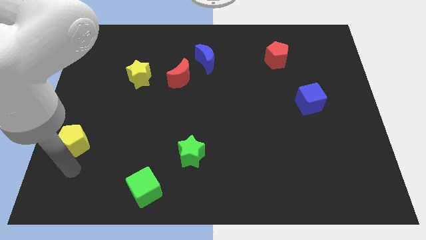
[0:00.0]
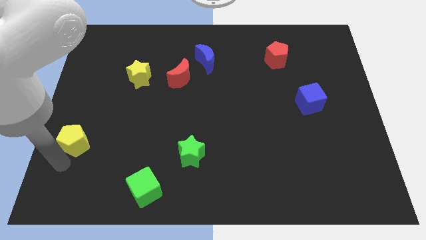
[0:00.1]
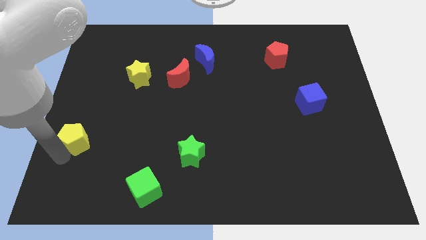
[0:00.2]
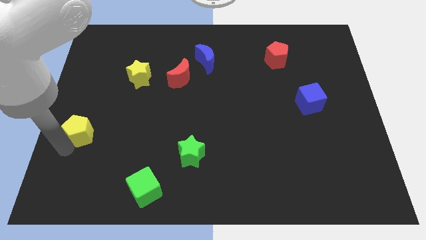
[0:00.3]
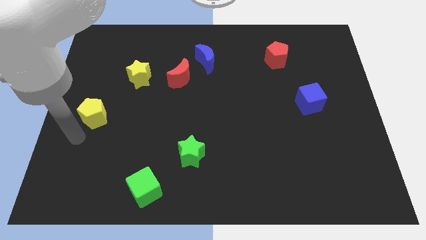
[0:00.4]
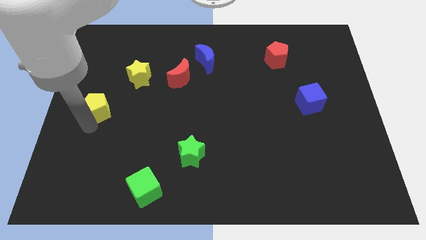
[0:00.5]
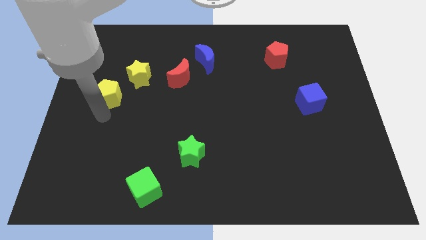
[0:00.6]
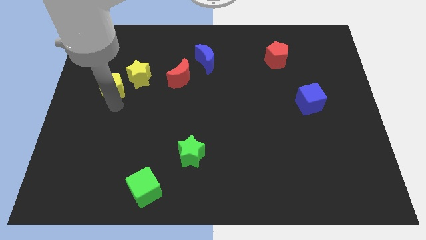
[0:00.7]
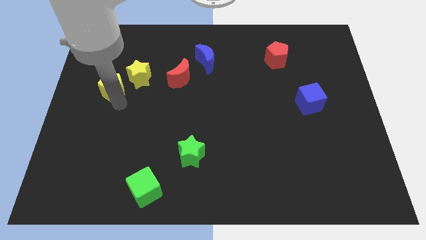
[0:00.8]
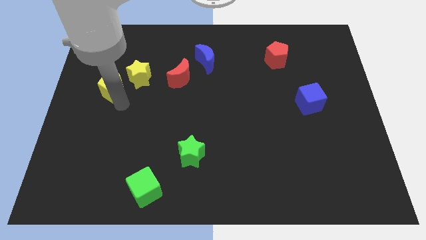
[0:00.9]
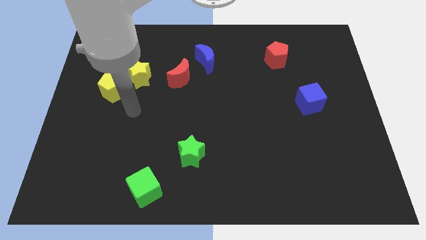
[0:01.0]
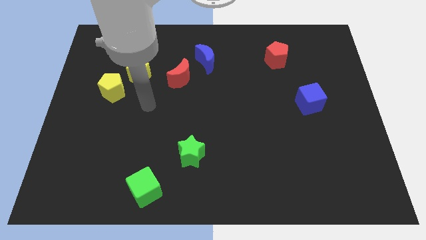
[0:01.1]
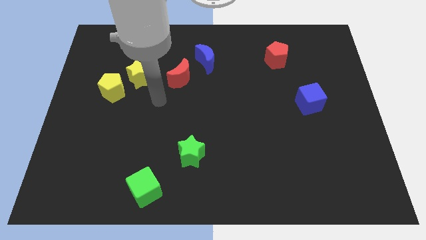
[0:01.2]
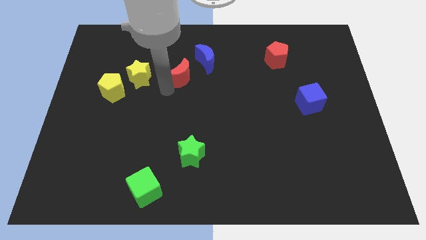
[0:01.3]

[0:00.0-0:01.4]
slide the yellow pentagon close to the yellow star

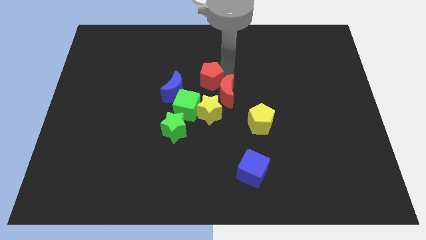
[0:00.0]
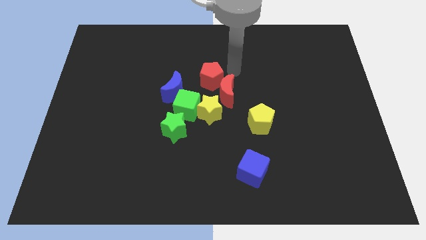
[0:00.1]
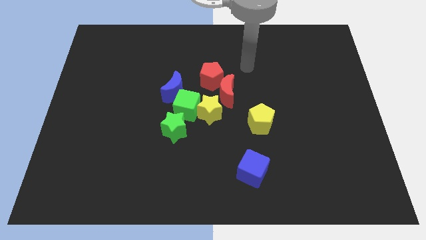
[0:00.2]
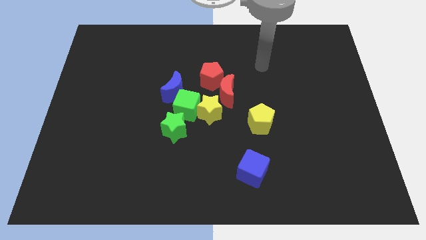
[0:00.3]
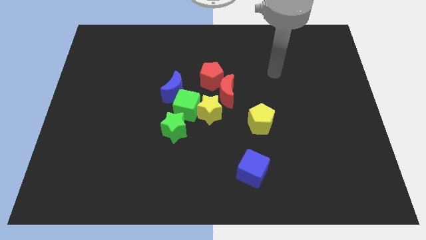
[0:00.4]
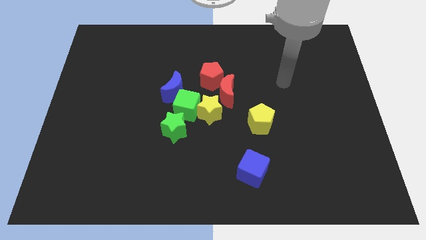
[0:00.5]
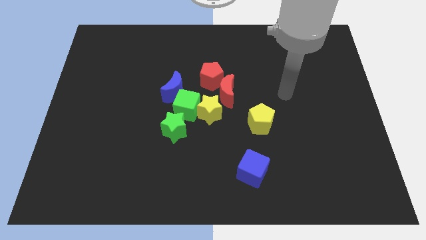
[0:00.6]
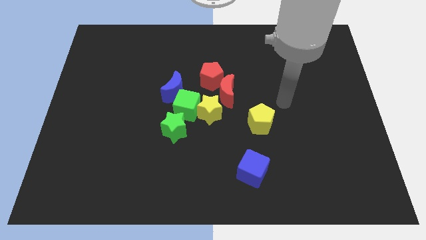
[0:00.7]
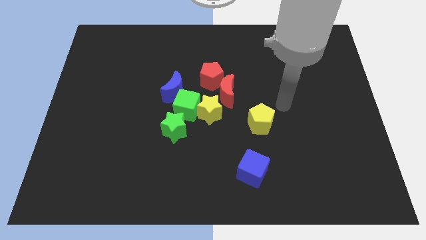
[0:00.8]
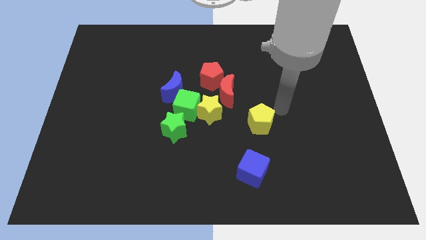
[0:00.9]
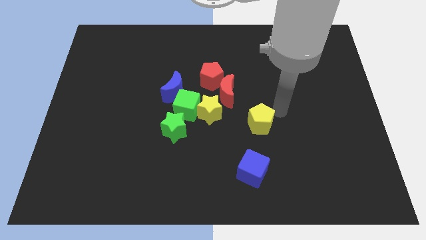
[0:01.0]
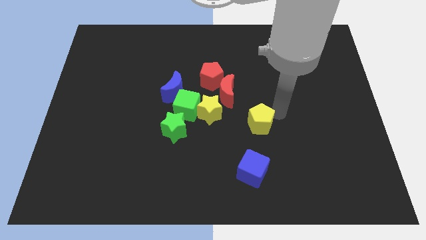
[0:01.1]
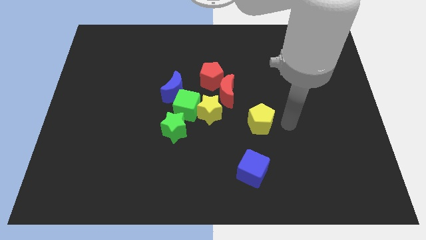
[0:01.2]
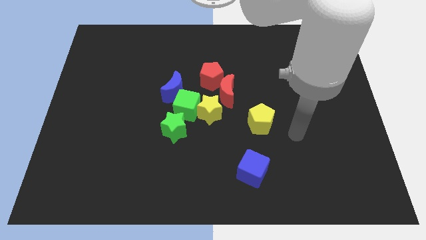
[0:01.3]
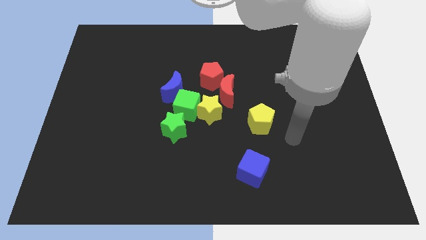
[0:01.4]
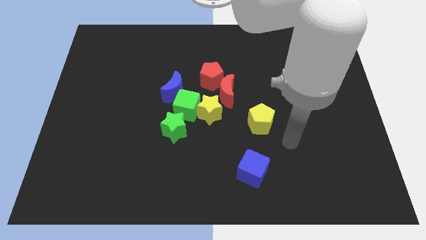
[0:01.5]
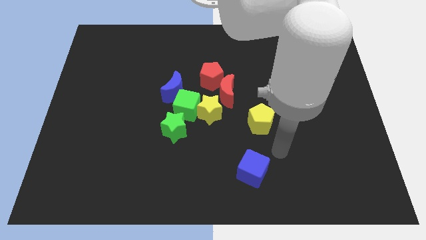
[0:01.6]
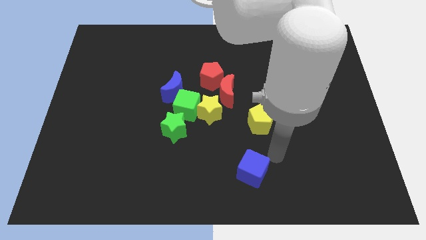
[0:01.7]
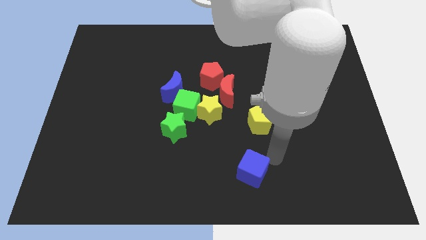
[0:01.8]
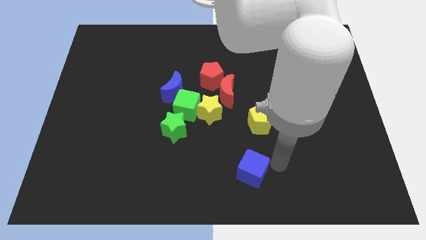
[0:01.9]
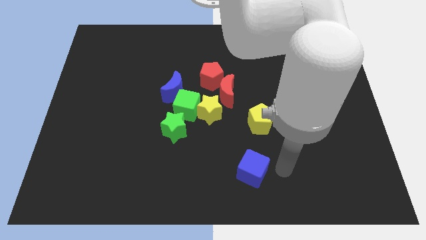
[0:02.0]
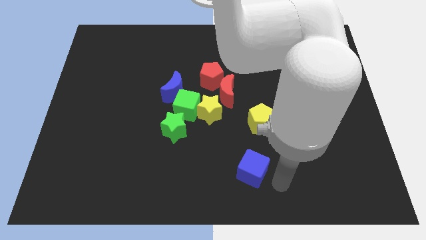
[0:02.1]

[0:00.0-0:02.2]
place your arm at the right side of the blue cube

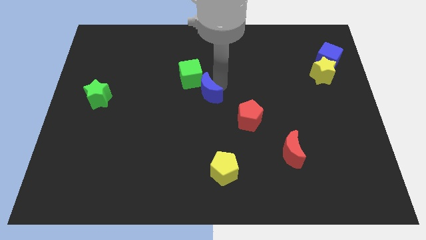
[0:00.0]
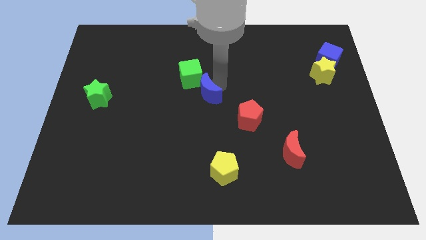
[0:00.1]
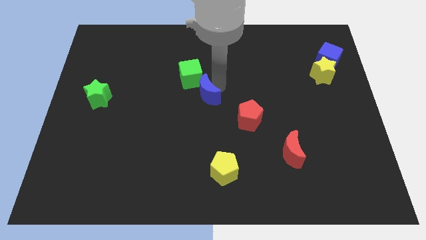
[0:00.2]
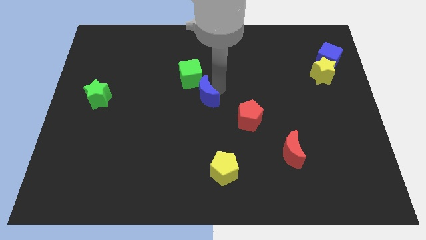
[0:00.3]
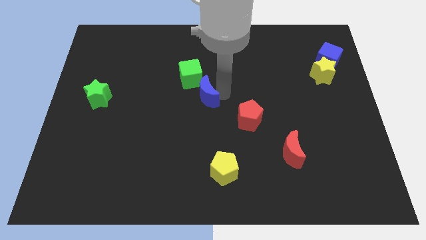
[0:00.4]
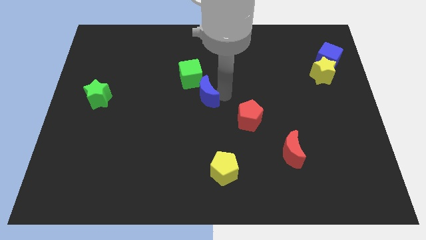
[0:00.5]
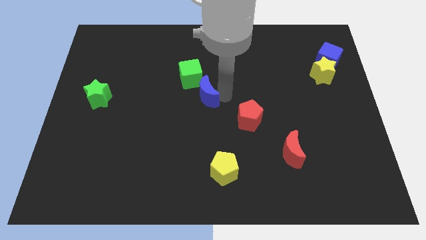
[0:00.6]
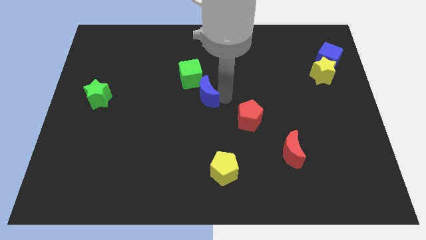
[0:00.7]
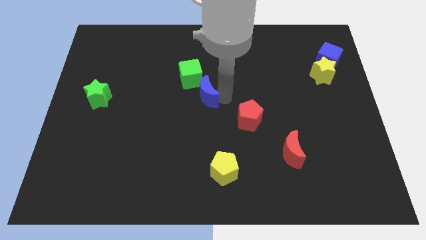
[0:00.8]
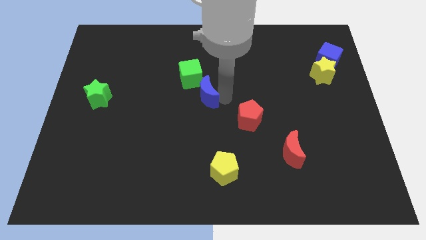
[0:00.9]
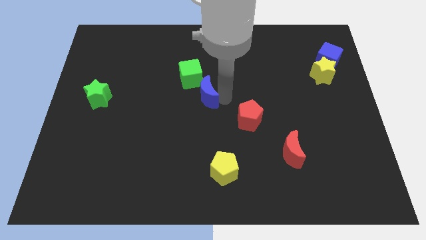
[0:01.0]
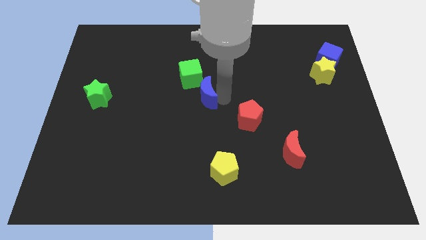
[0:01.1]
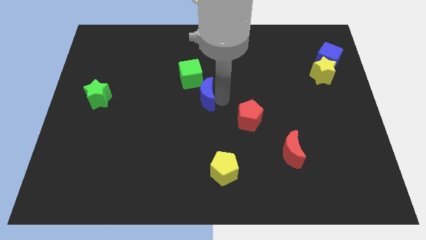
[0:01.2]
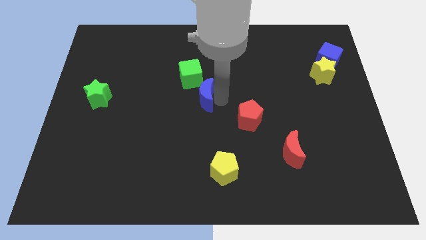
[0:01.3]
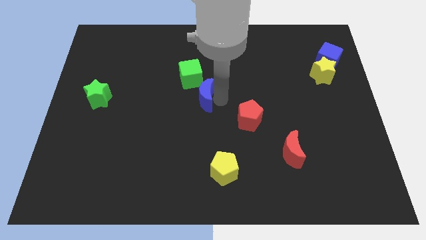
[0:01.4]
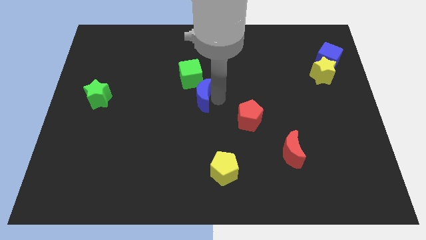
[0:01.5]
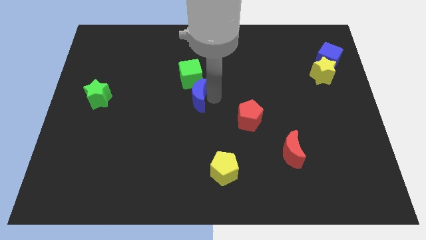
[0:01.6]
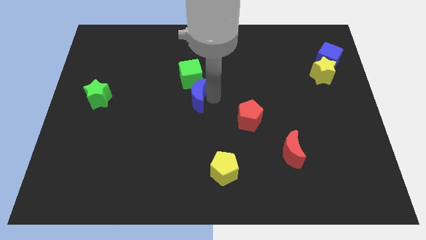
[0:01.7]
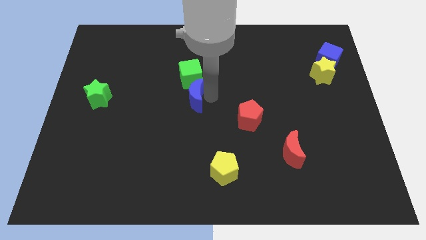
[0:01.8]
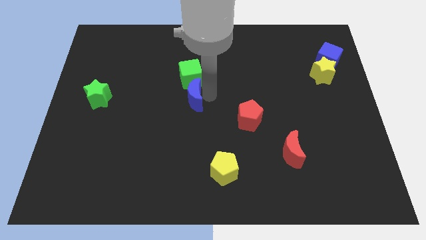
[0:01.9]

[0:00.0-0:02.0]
place blue crescent below the green cube

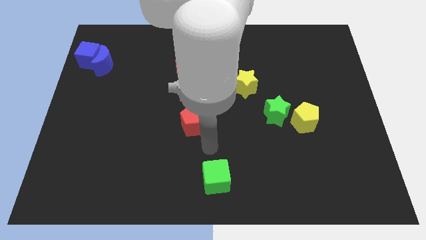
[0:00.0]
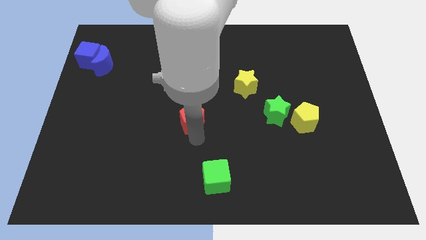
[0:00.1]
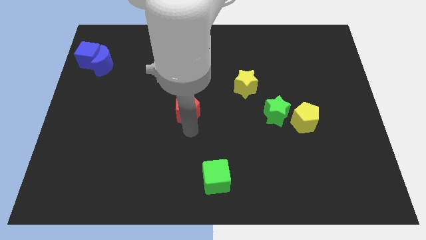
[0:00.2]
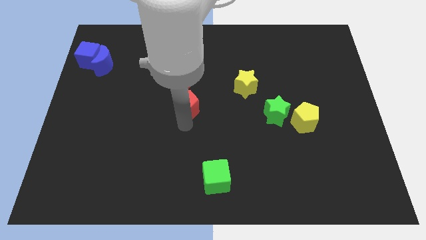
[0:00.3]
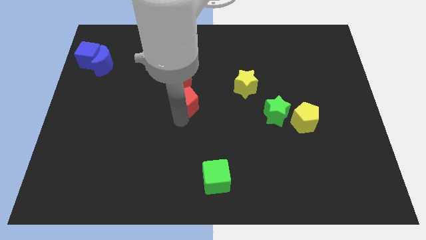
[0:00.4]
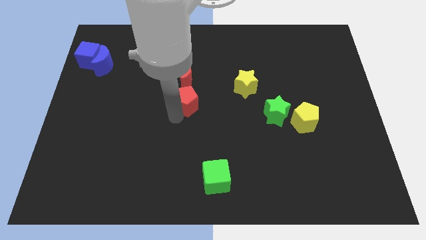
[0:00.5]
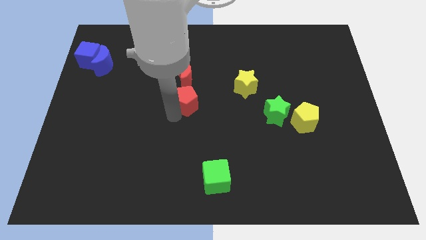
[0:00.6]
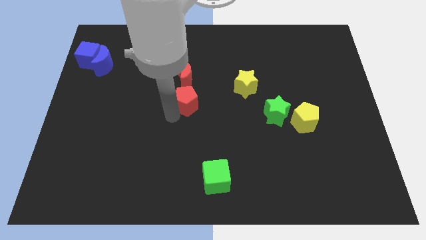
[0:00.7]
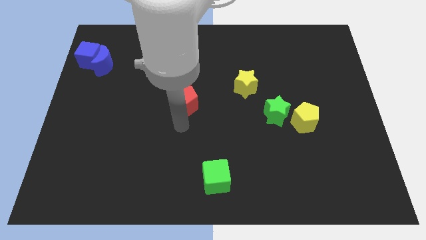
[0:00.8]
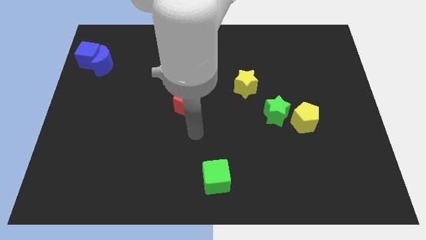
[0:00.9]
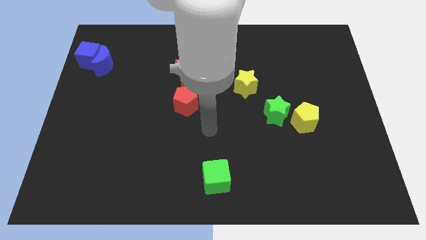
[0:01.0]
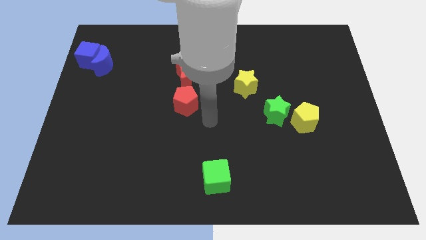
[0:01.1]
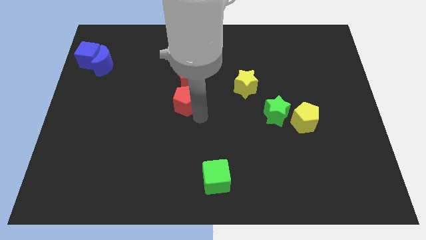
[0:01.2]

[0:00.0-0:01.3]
place the red pentagon at the bottom side of the red moon

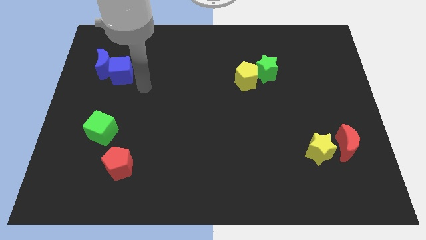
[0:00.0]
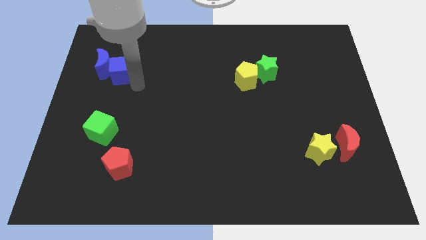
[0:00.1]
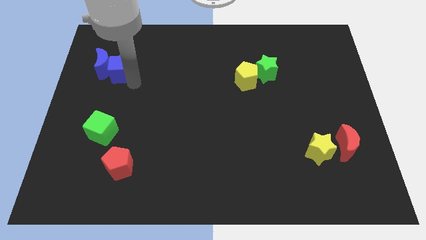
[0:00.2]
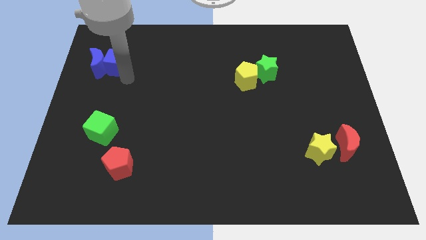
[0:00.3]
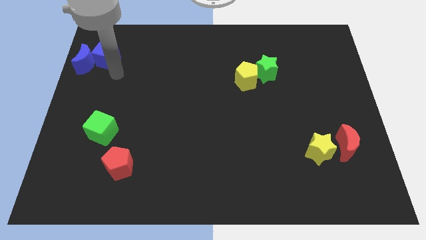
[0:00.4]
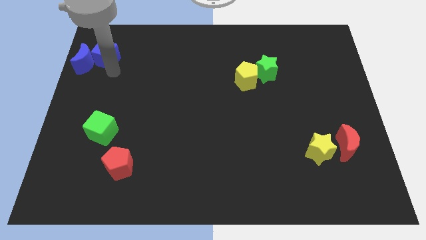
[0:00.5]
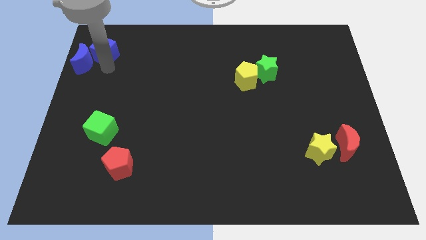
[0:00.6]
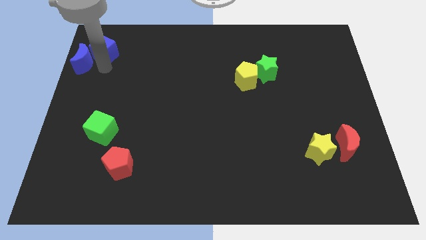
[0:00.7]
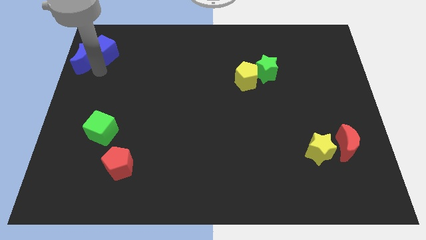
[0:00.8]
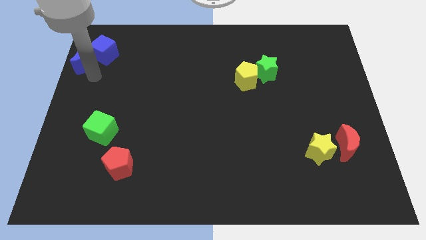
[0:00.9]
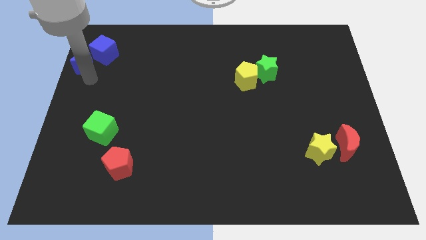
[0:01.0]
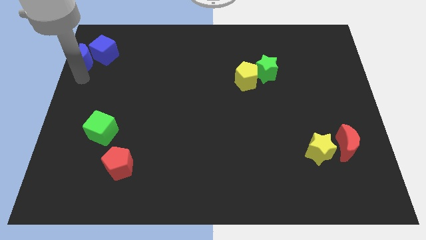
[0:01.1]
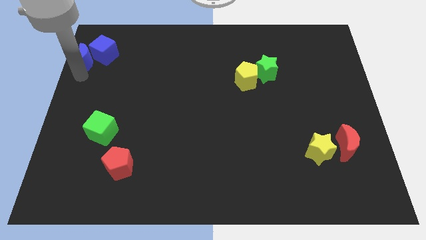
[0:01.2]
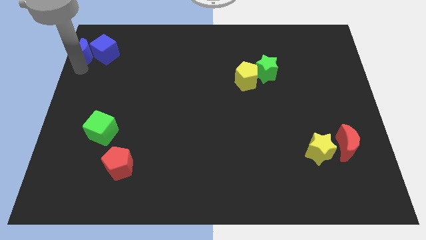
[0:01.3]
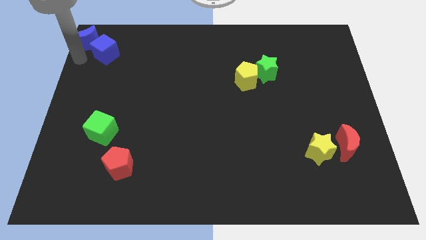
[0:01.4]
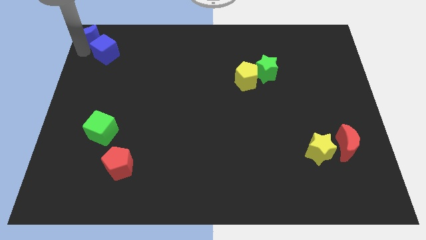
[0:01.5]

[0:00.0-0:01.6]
slide blue blocks at top left

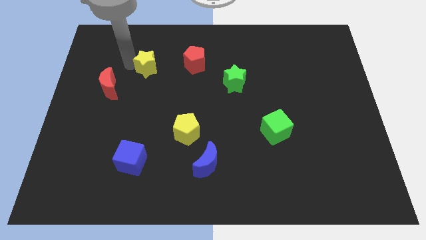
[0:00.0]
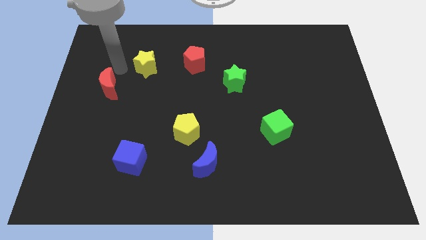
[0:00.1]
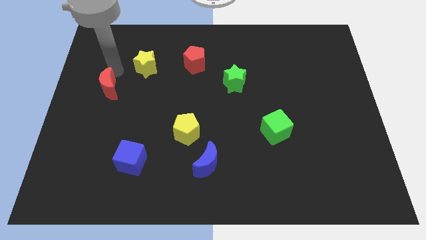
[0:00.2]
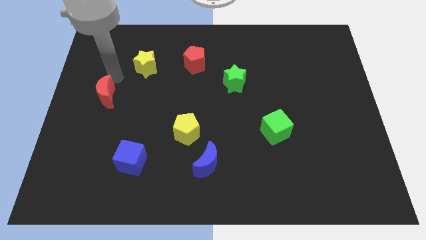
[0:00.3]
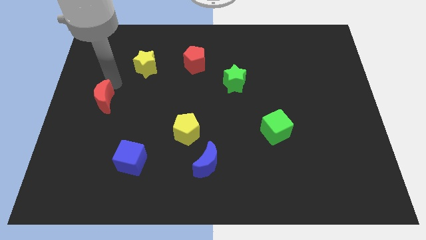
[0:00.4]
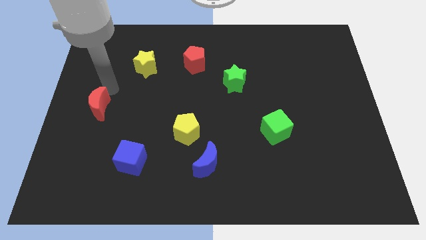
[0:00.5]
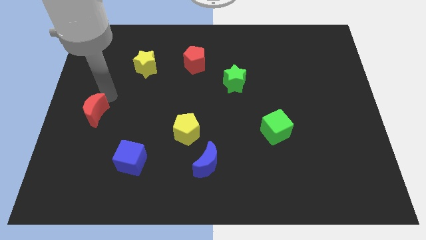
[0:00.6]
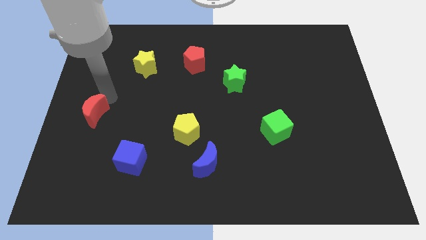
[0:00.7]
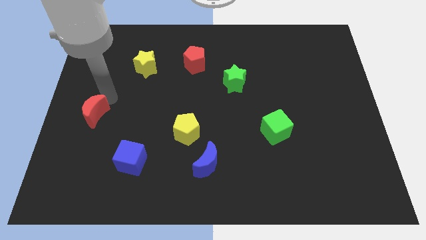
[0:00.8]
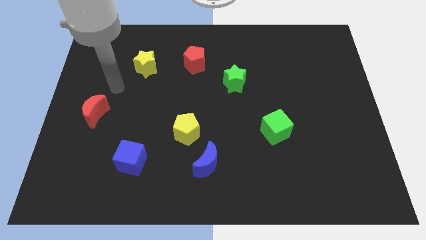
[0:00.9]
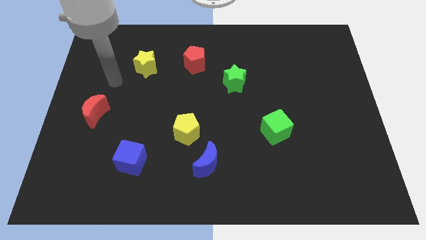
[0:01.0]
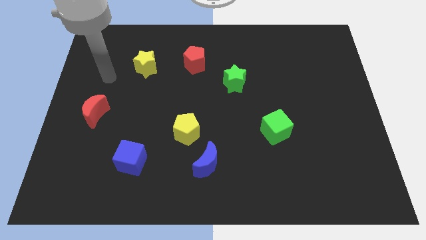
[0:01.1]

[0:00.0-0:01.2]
push red moon towards center left
